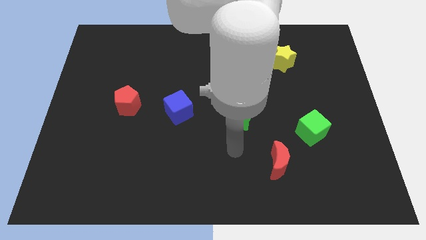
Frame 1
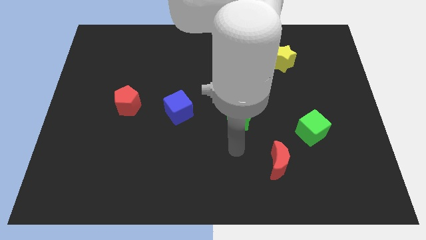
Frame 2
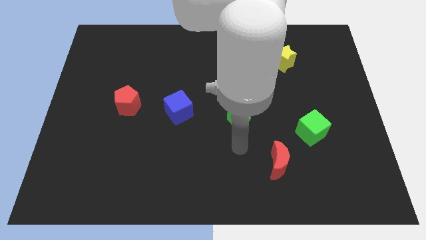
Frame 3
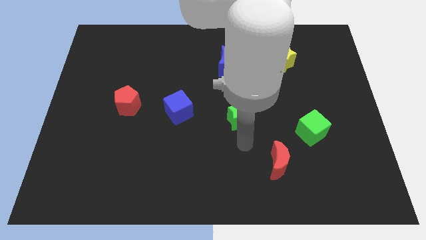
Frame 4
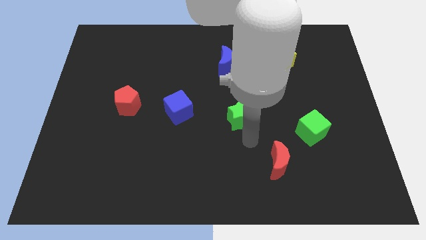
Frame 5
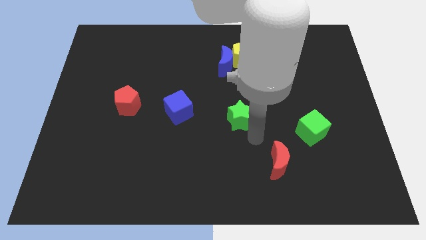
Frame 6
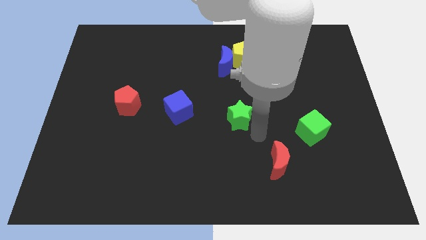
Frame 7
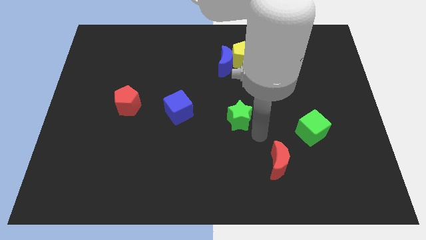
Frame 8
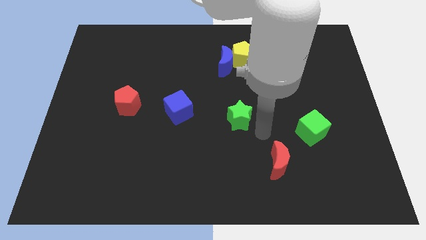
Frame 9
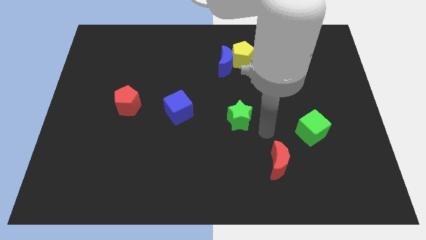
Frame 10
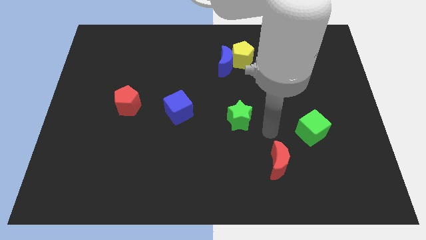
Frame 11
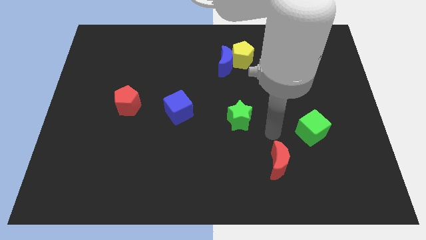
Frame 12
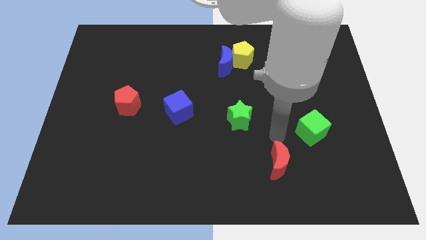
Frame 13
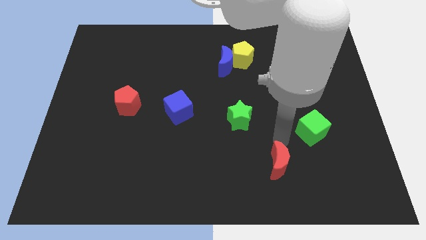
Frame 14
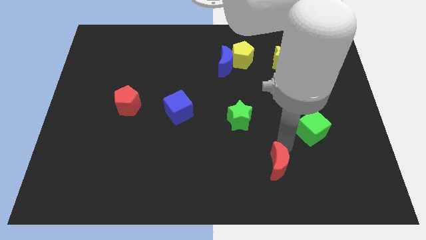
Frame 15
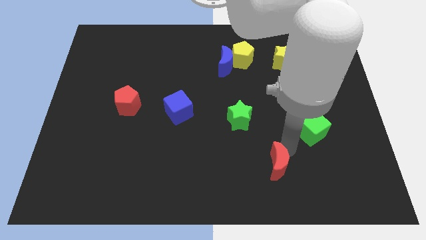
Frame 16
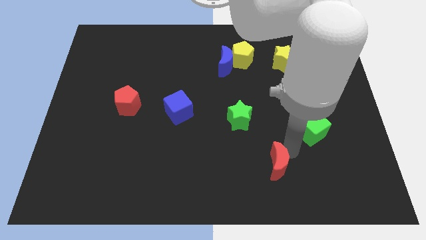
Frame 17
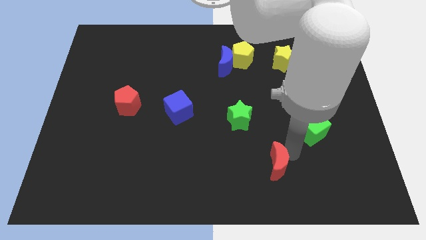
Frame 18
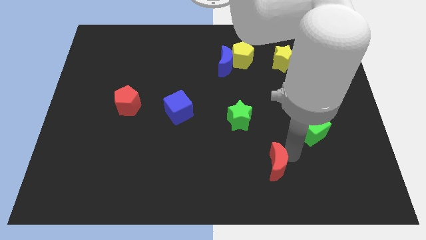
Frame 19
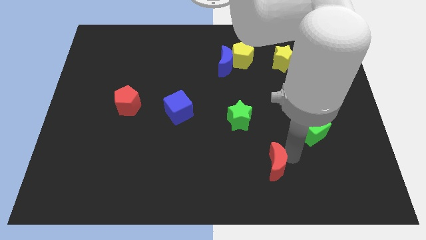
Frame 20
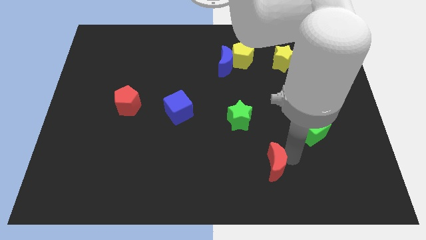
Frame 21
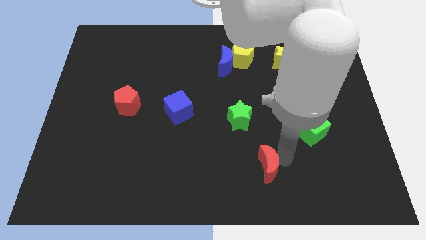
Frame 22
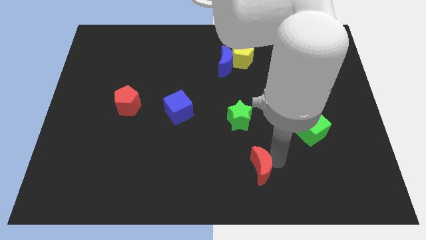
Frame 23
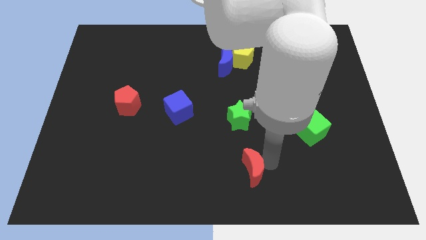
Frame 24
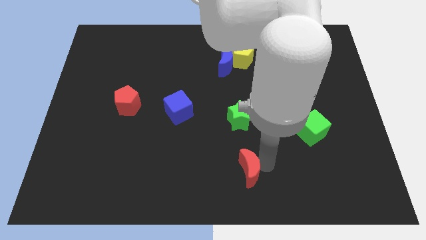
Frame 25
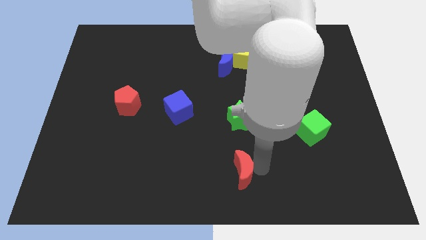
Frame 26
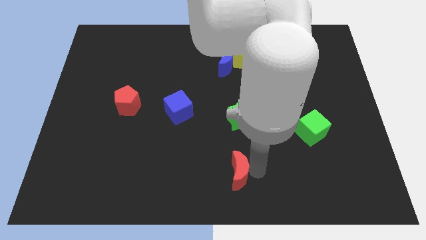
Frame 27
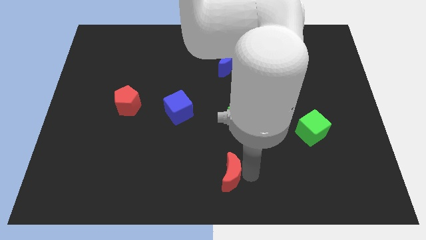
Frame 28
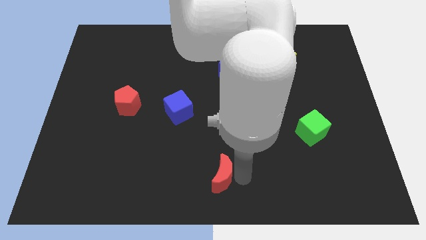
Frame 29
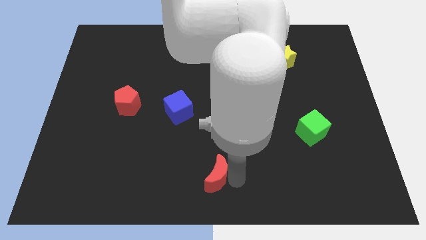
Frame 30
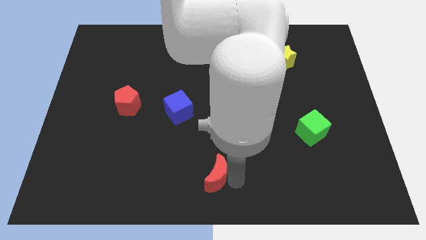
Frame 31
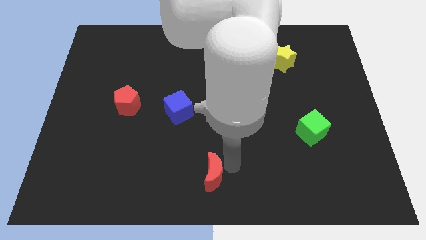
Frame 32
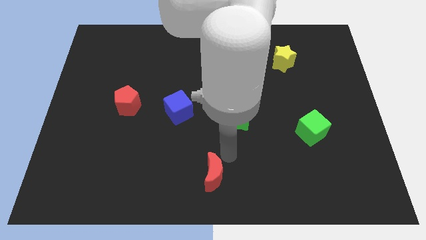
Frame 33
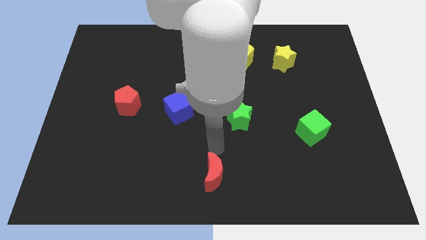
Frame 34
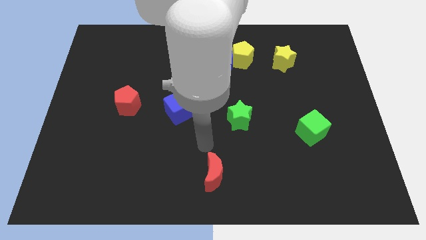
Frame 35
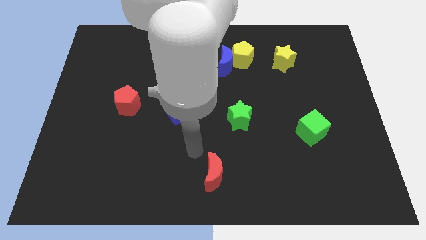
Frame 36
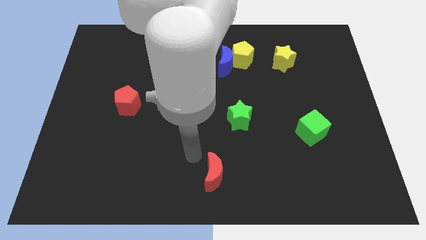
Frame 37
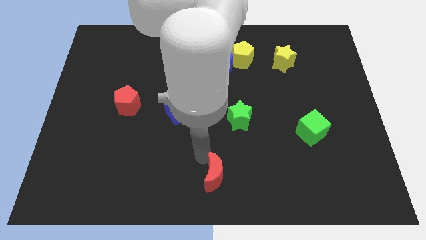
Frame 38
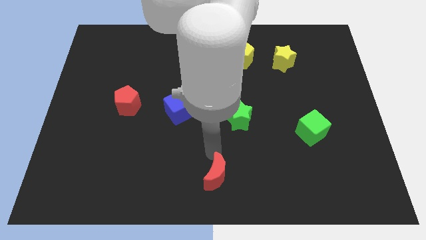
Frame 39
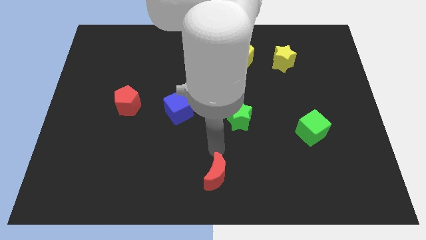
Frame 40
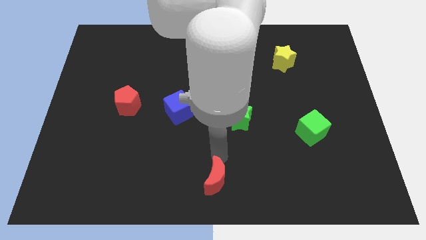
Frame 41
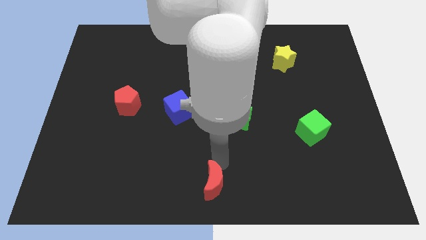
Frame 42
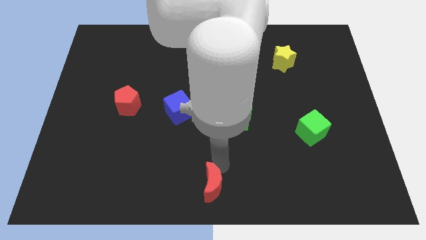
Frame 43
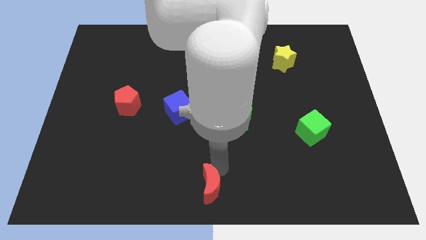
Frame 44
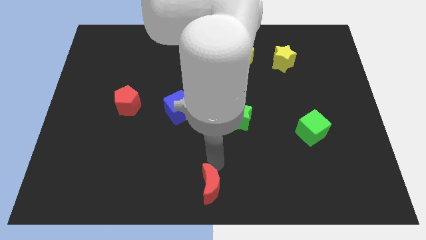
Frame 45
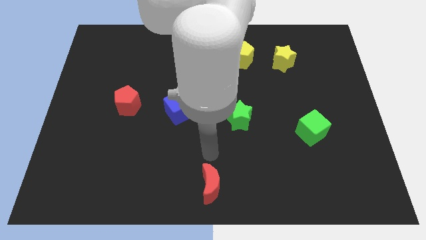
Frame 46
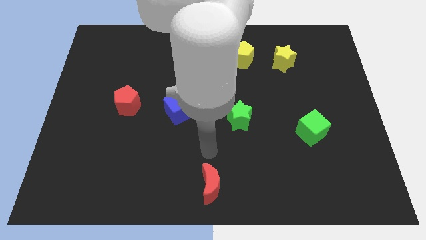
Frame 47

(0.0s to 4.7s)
drag the pentagon towards bottom middle of the board

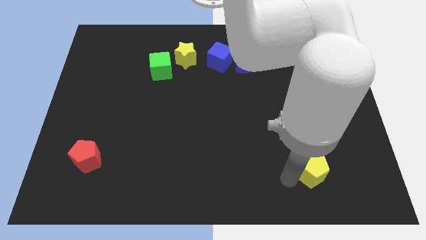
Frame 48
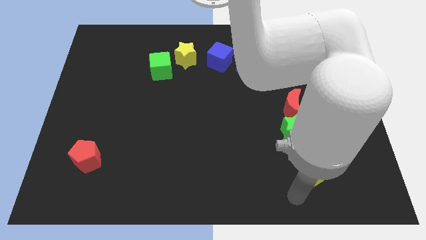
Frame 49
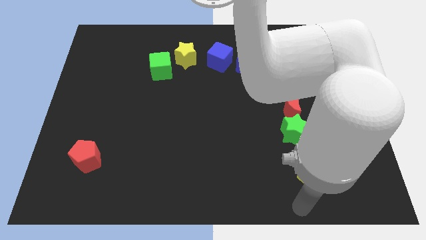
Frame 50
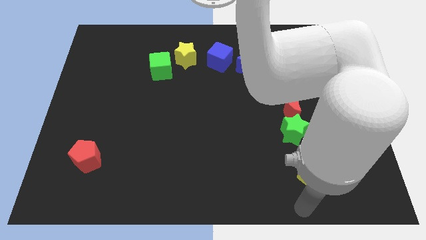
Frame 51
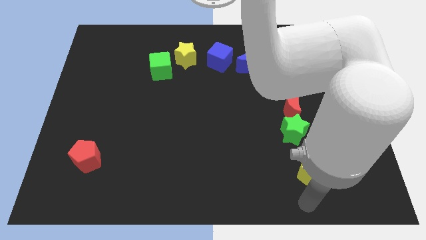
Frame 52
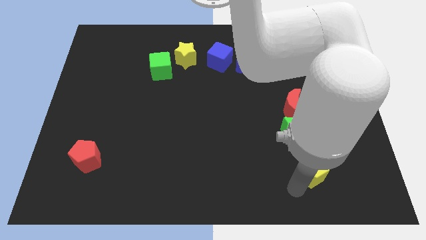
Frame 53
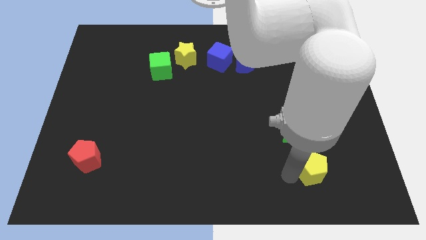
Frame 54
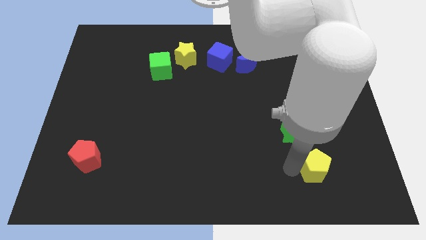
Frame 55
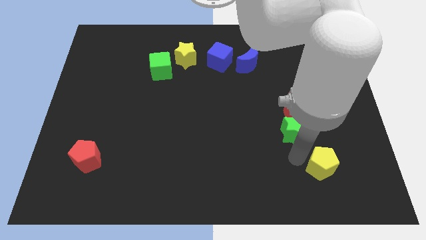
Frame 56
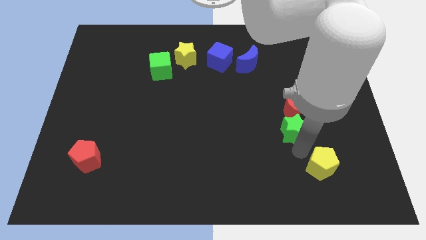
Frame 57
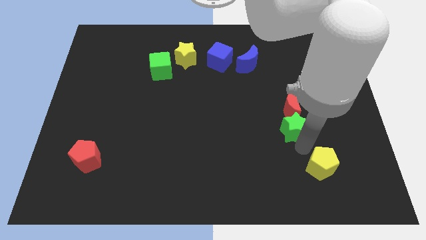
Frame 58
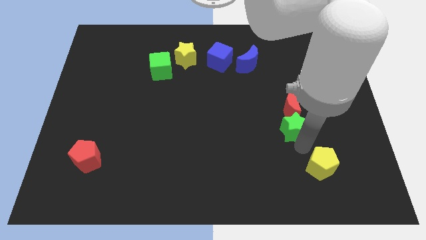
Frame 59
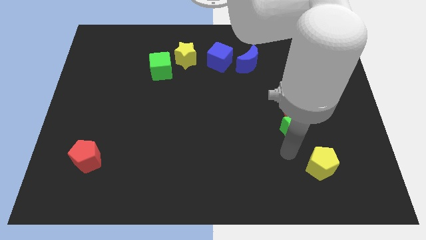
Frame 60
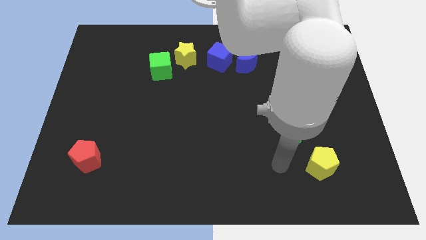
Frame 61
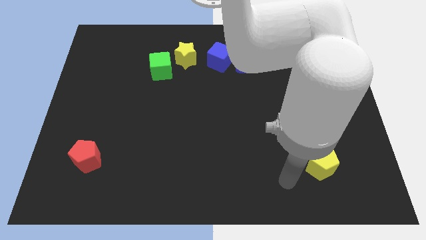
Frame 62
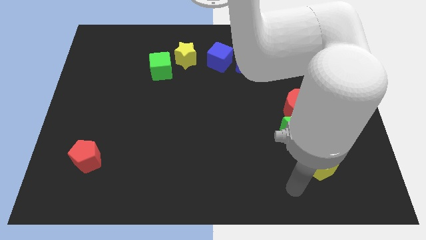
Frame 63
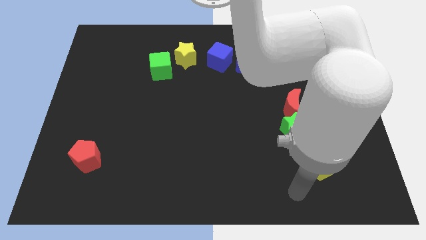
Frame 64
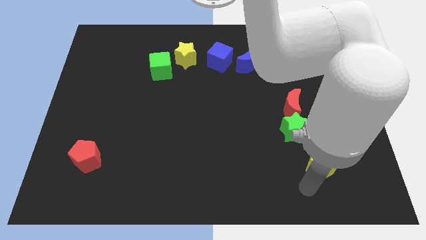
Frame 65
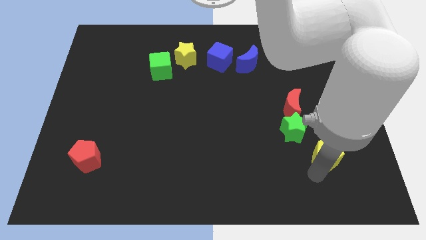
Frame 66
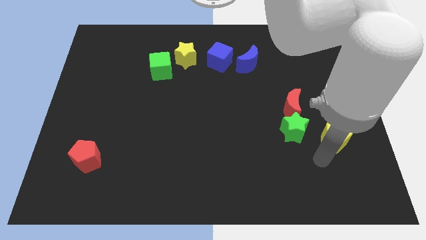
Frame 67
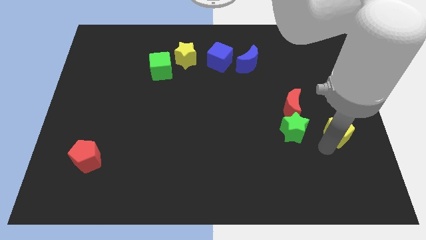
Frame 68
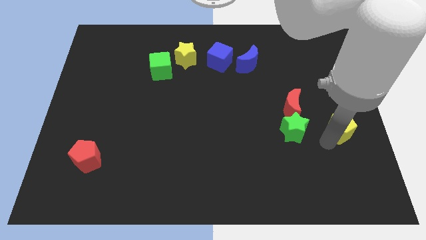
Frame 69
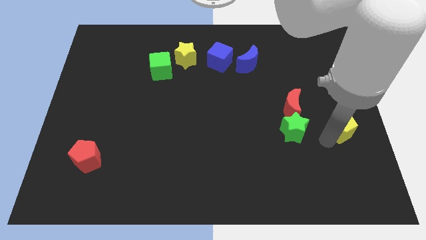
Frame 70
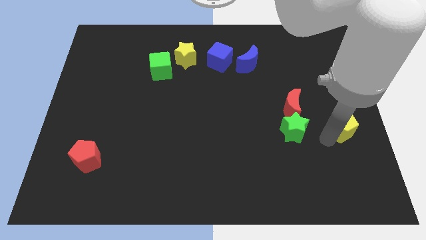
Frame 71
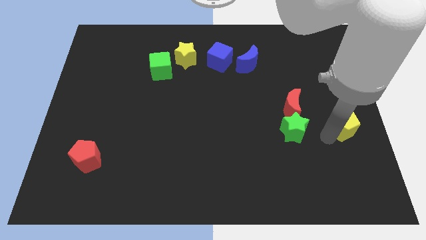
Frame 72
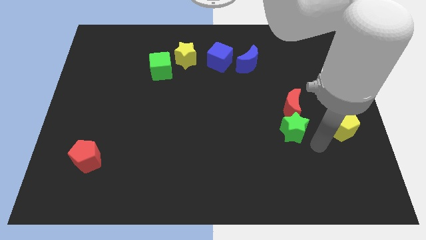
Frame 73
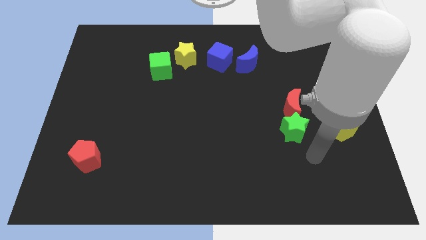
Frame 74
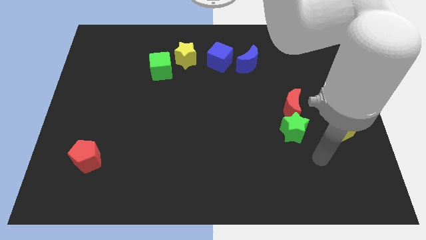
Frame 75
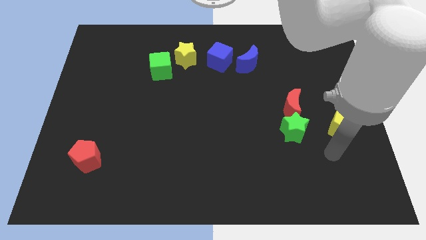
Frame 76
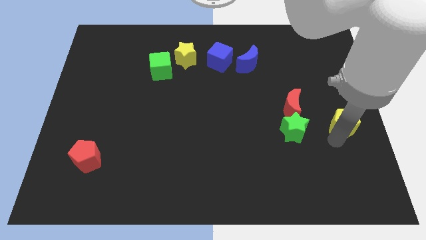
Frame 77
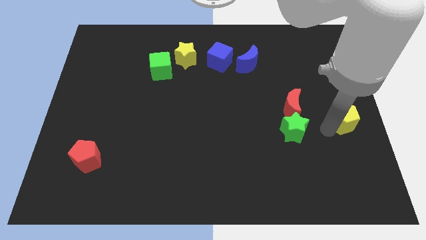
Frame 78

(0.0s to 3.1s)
place the yellow pentagon to the right of the green star

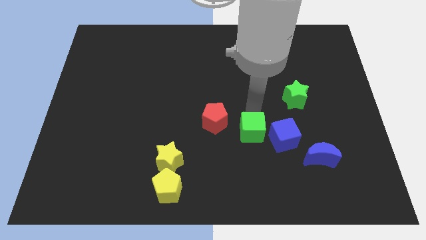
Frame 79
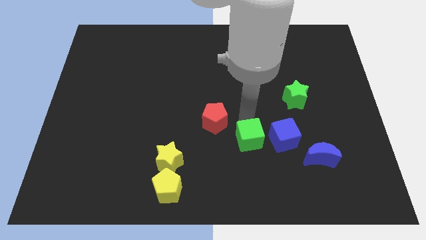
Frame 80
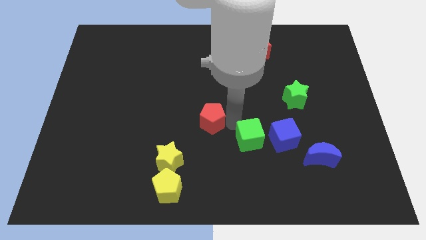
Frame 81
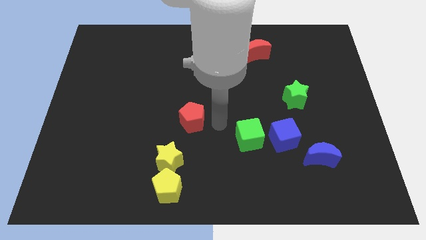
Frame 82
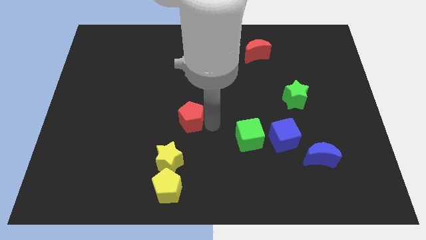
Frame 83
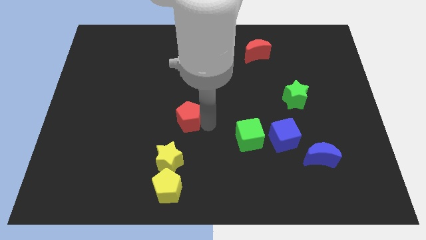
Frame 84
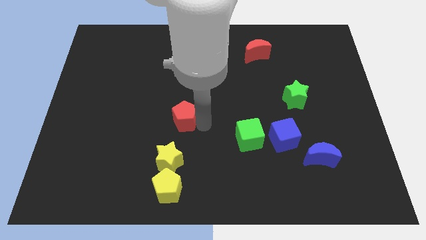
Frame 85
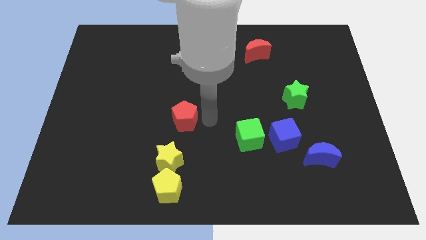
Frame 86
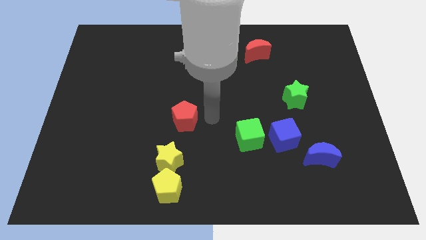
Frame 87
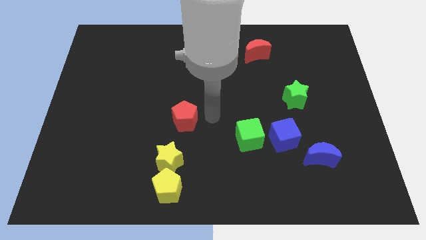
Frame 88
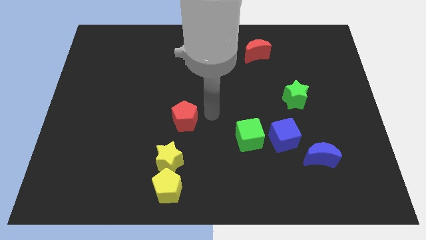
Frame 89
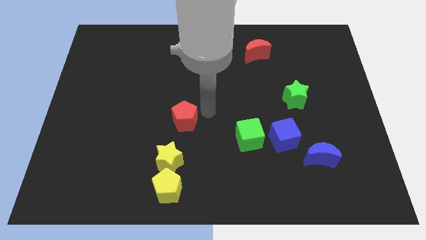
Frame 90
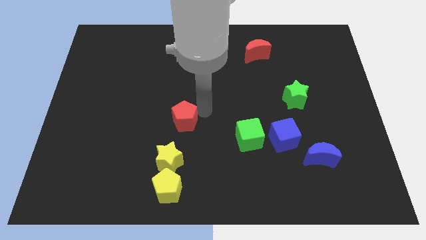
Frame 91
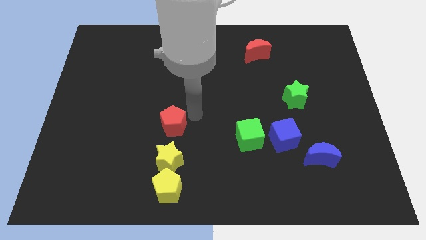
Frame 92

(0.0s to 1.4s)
slightly move the red pentagon towards the left
